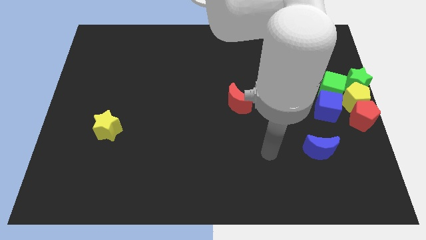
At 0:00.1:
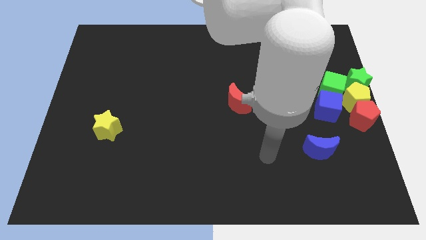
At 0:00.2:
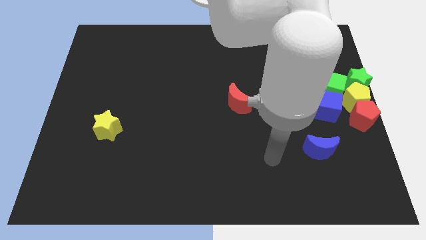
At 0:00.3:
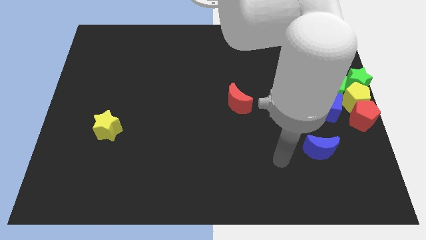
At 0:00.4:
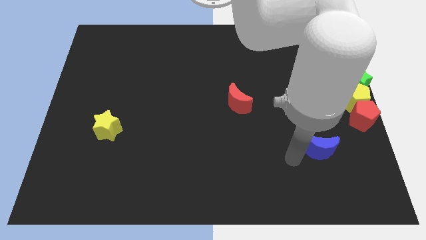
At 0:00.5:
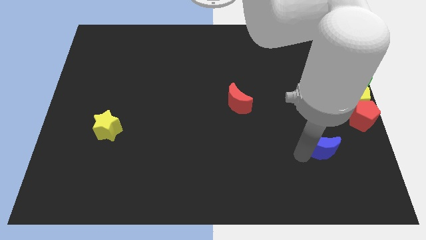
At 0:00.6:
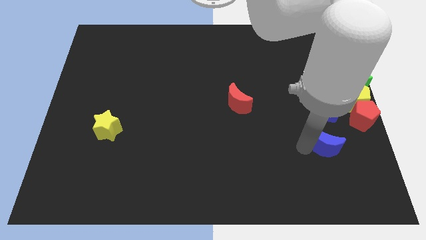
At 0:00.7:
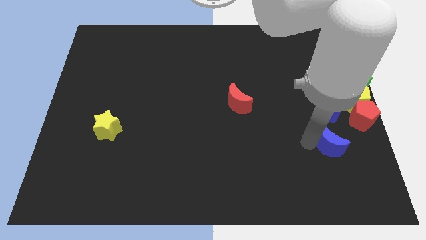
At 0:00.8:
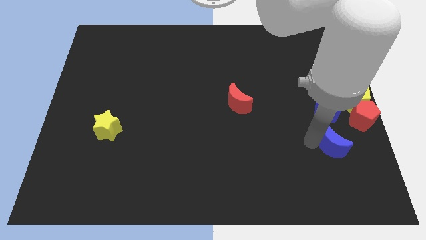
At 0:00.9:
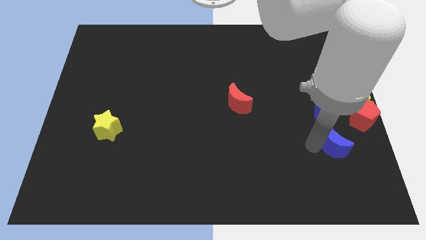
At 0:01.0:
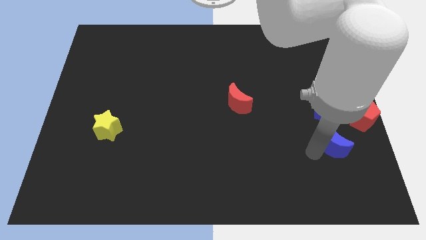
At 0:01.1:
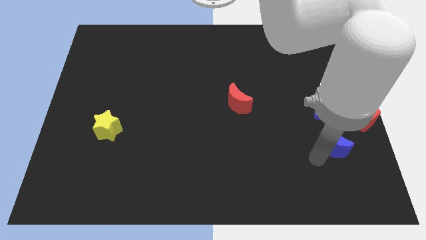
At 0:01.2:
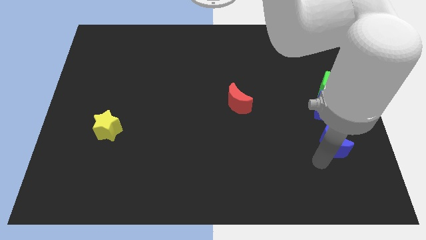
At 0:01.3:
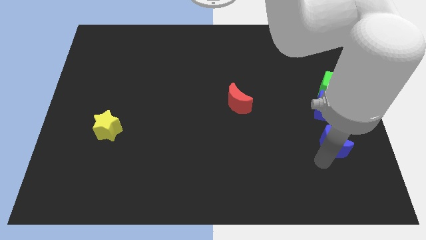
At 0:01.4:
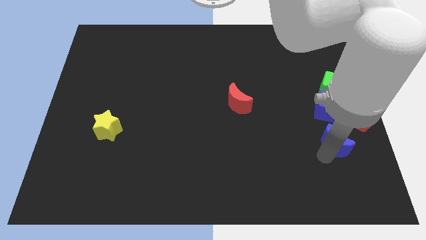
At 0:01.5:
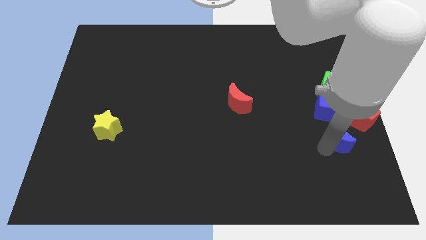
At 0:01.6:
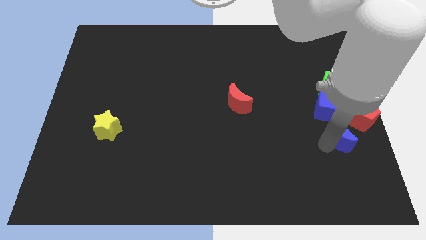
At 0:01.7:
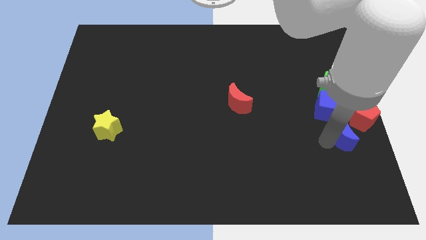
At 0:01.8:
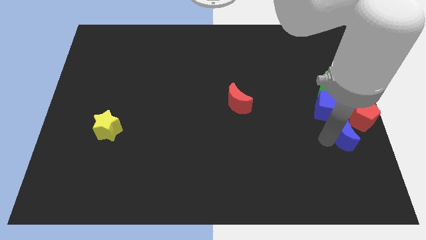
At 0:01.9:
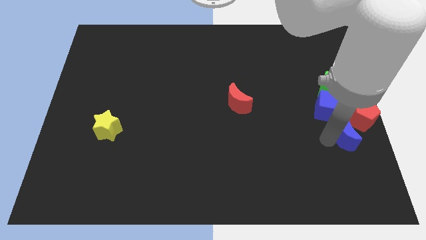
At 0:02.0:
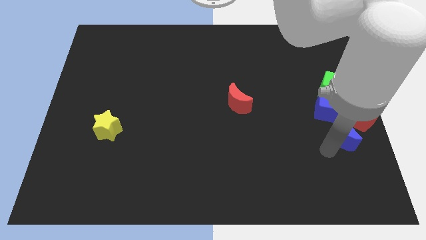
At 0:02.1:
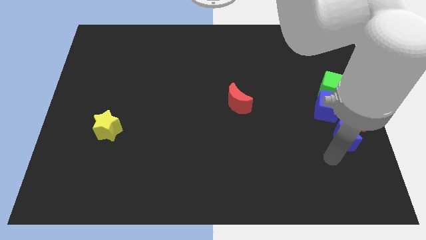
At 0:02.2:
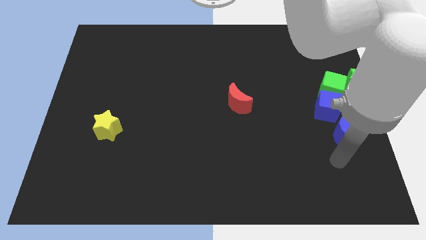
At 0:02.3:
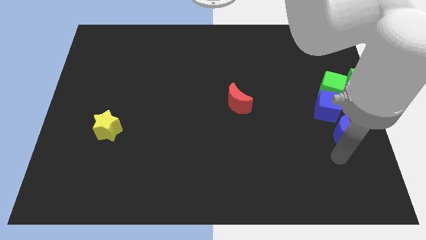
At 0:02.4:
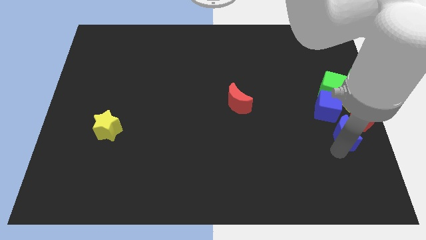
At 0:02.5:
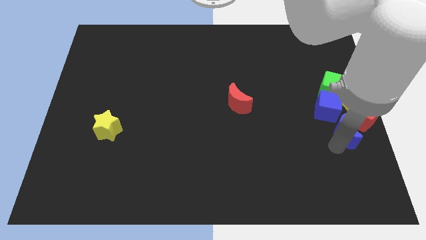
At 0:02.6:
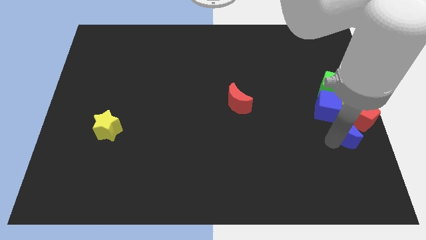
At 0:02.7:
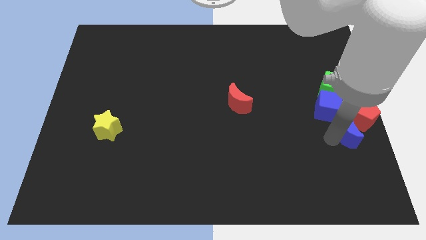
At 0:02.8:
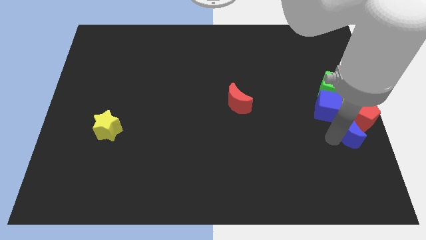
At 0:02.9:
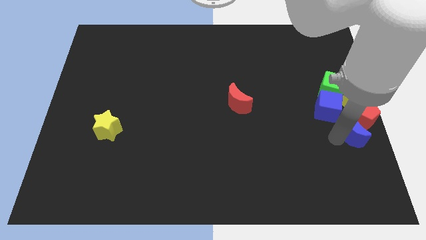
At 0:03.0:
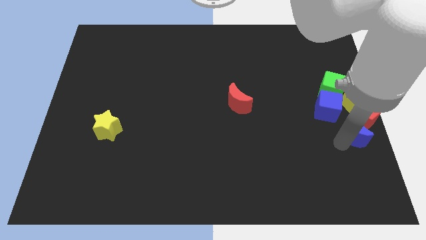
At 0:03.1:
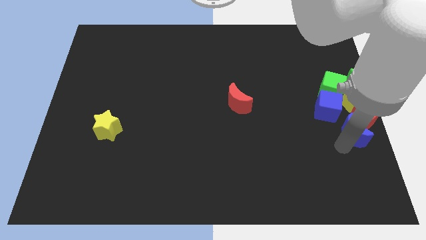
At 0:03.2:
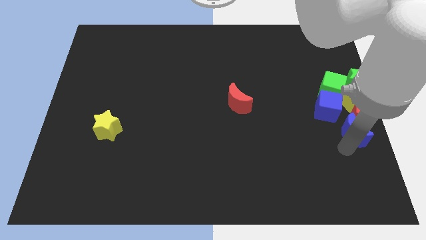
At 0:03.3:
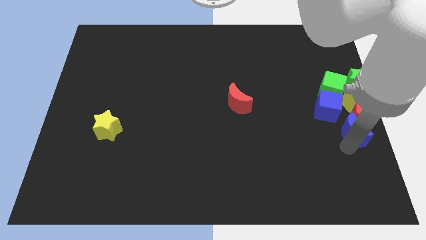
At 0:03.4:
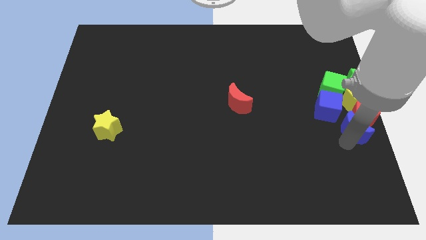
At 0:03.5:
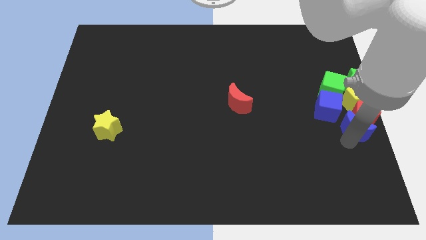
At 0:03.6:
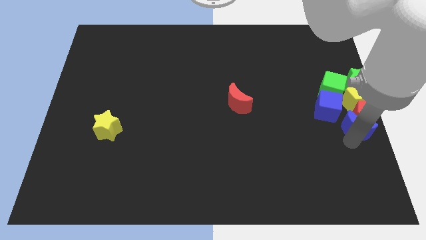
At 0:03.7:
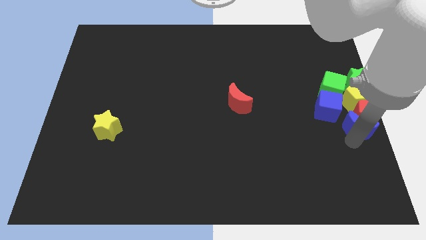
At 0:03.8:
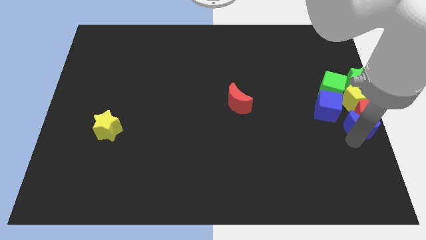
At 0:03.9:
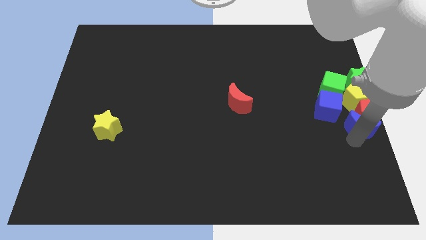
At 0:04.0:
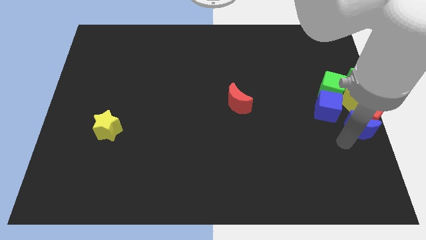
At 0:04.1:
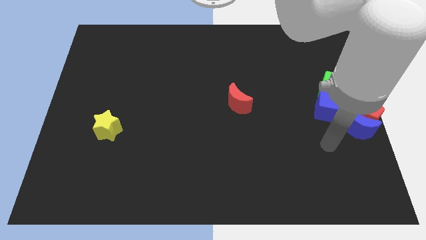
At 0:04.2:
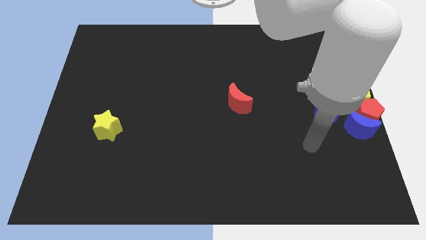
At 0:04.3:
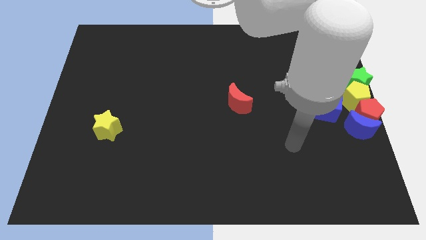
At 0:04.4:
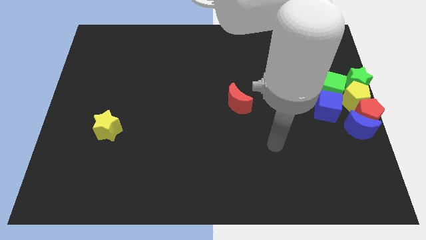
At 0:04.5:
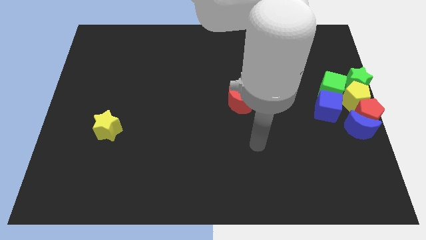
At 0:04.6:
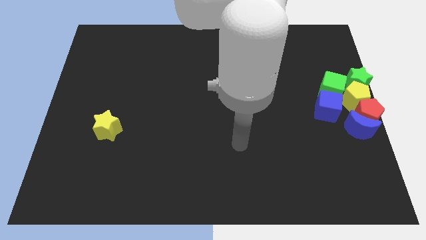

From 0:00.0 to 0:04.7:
place the blue crescent below the red pentagon

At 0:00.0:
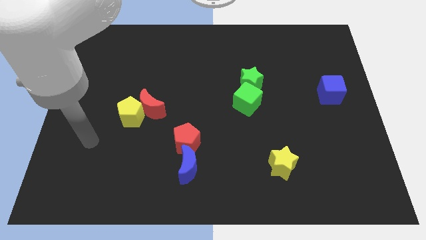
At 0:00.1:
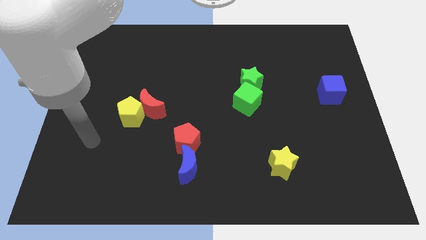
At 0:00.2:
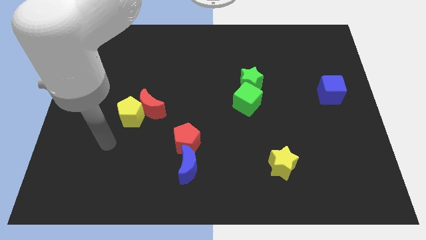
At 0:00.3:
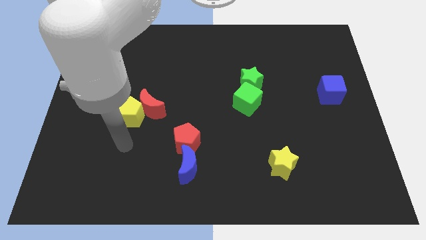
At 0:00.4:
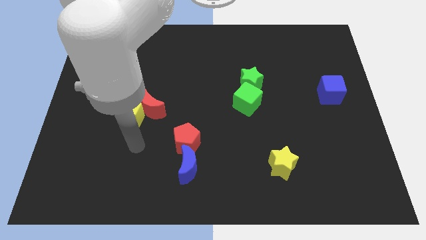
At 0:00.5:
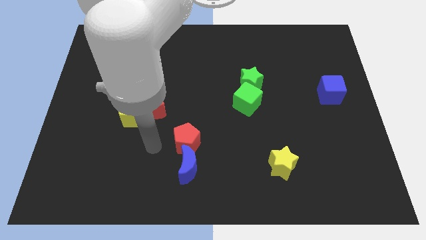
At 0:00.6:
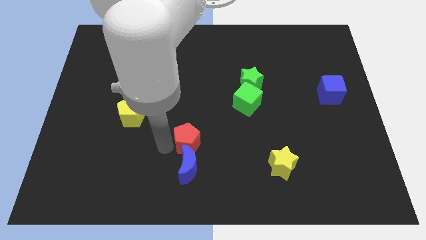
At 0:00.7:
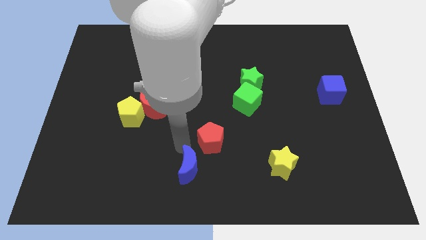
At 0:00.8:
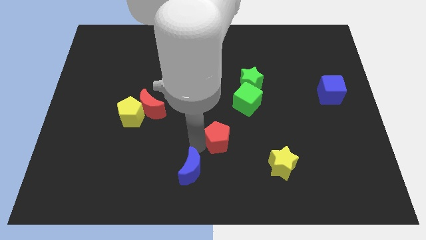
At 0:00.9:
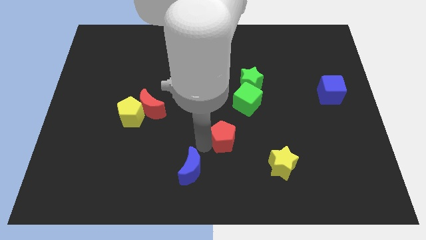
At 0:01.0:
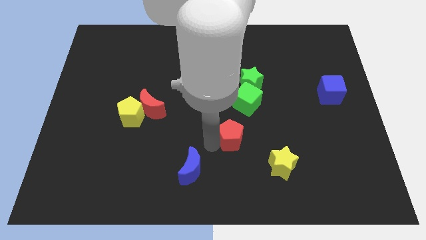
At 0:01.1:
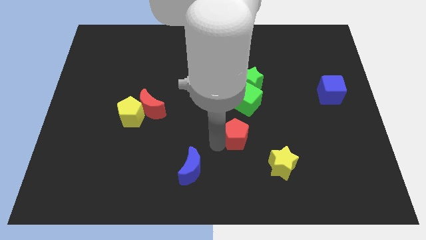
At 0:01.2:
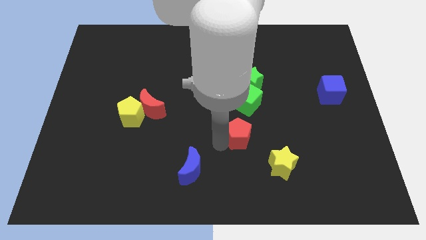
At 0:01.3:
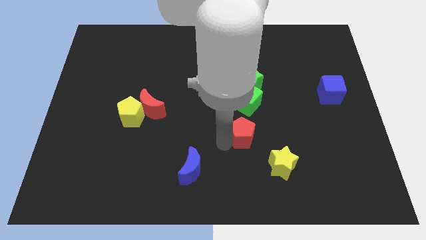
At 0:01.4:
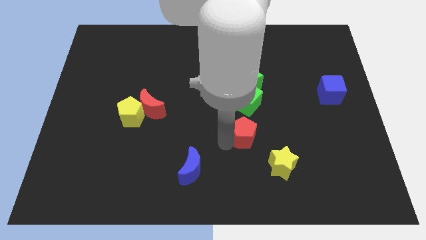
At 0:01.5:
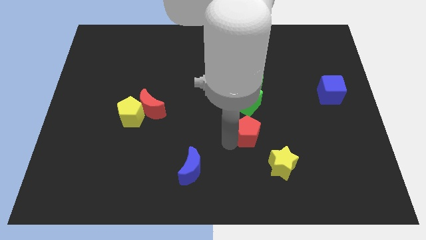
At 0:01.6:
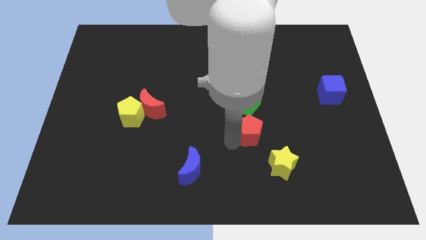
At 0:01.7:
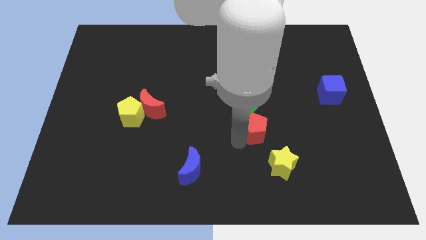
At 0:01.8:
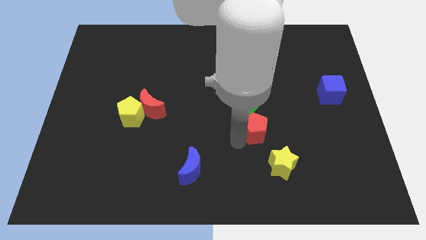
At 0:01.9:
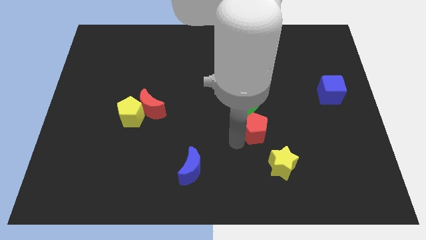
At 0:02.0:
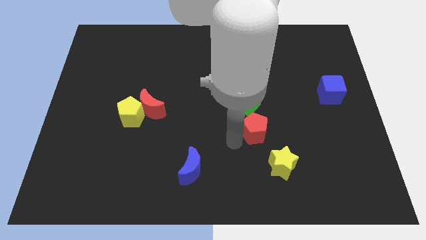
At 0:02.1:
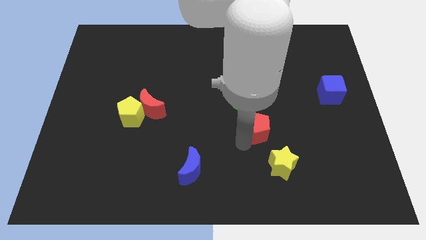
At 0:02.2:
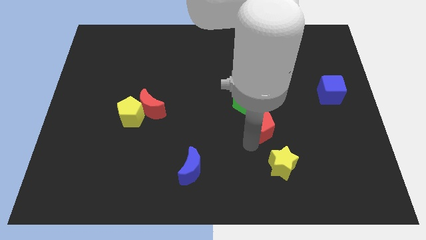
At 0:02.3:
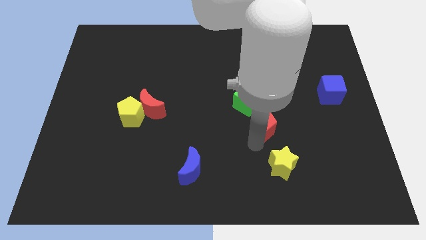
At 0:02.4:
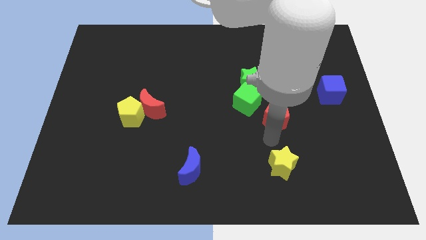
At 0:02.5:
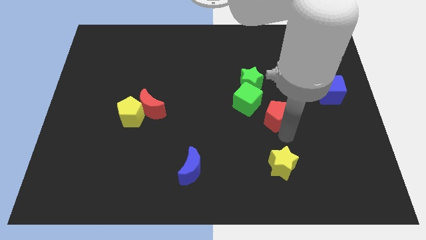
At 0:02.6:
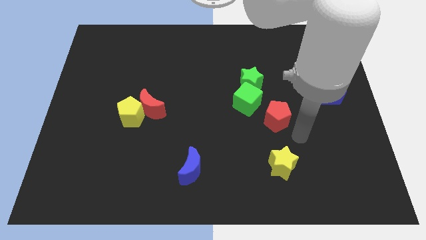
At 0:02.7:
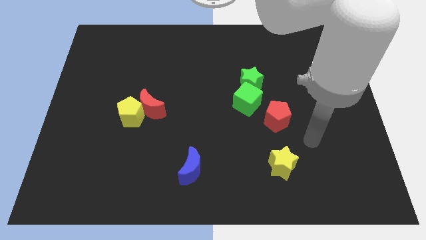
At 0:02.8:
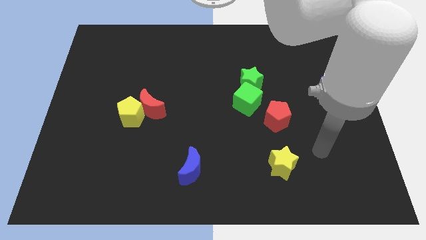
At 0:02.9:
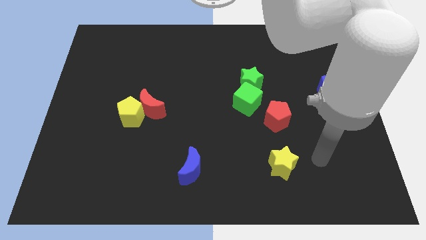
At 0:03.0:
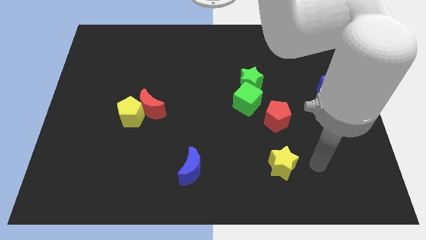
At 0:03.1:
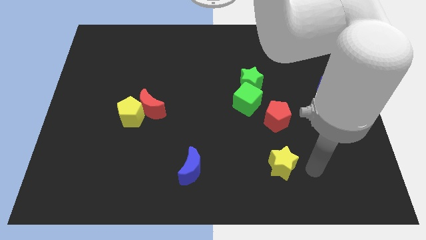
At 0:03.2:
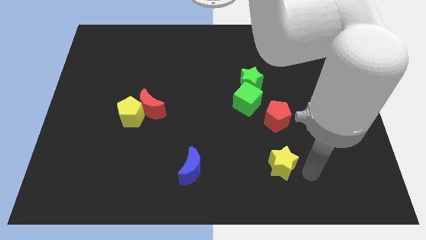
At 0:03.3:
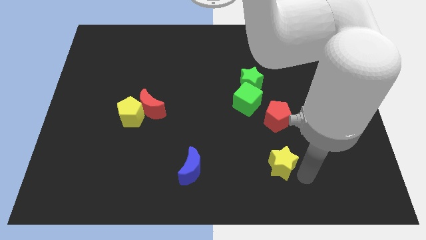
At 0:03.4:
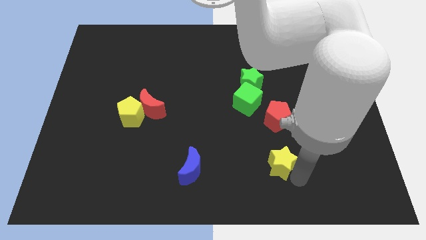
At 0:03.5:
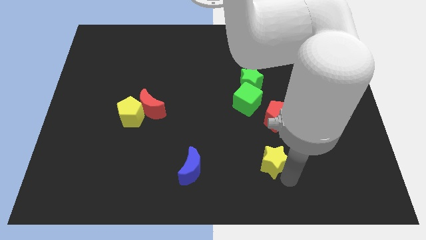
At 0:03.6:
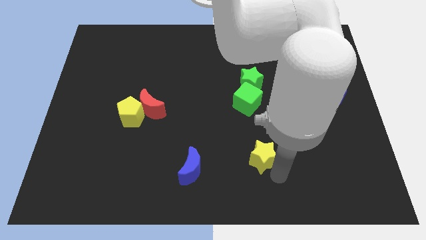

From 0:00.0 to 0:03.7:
place the red pentagon towards right center

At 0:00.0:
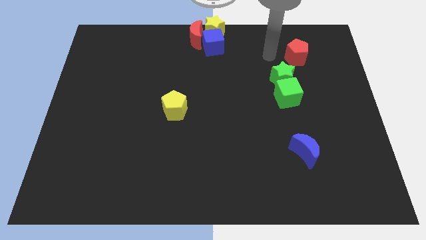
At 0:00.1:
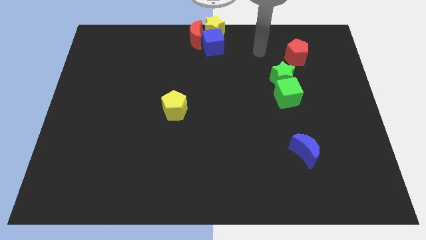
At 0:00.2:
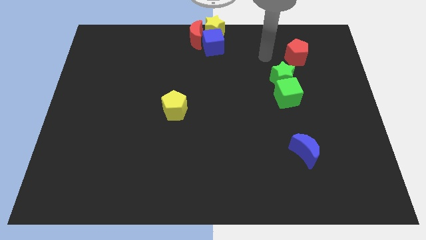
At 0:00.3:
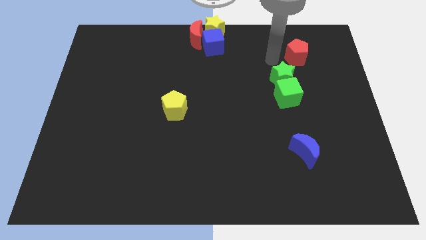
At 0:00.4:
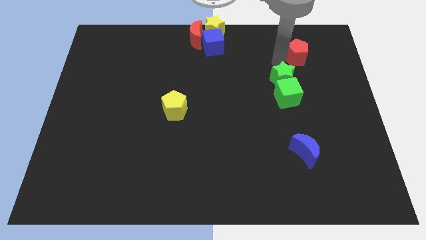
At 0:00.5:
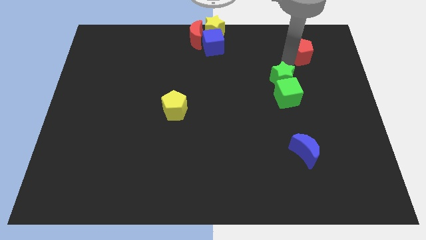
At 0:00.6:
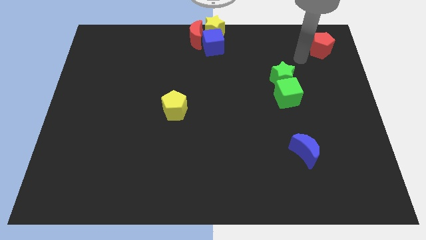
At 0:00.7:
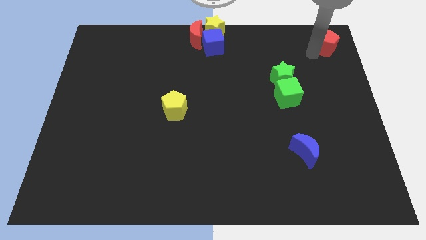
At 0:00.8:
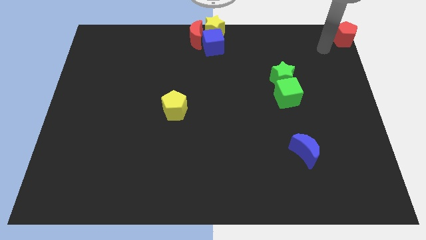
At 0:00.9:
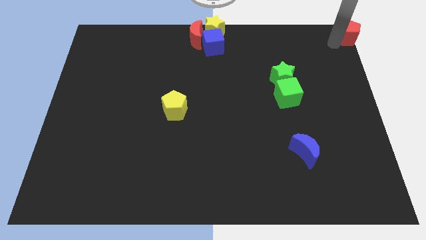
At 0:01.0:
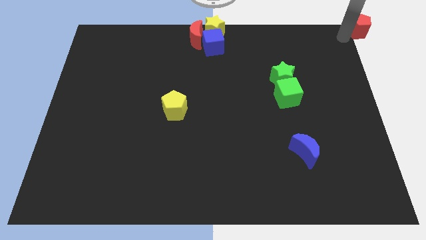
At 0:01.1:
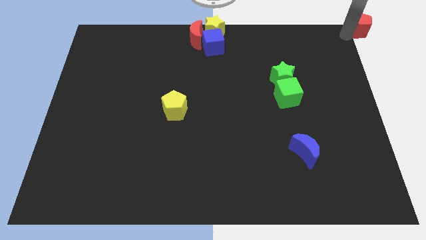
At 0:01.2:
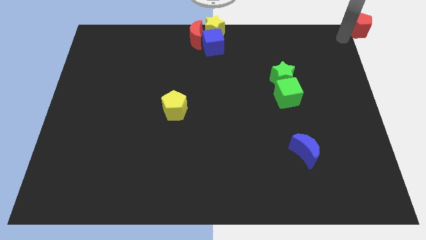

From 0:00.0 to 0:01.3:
move the red pentagon to the top right corner
